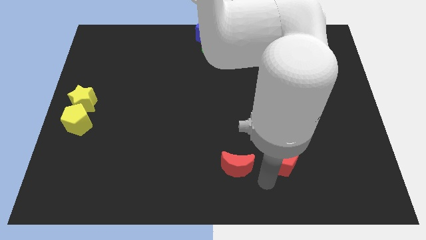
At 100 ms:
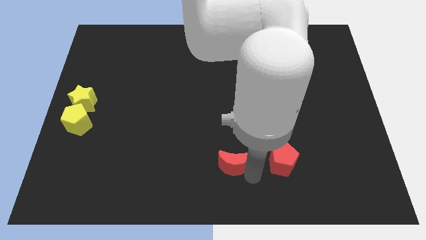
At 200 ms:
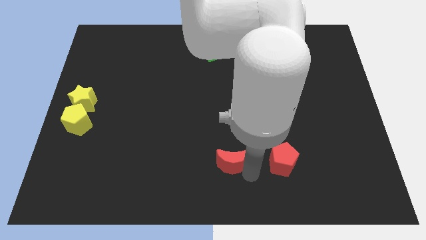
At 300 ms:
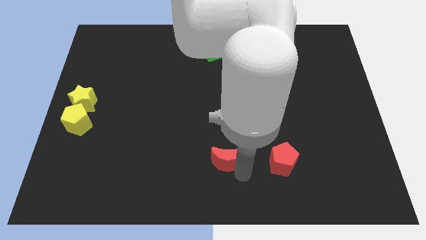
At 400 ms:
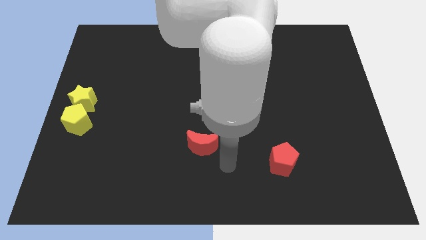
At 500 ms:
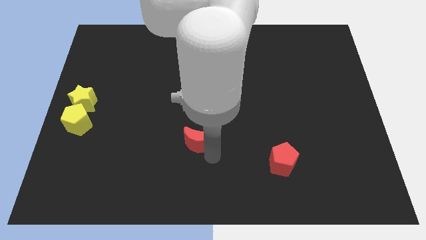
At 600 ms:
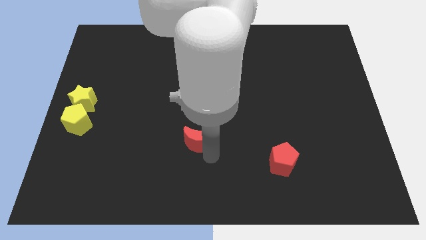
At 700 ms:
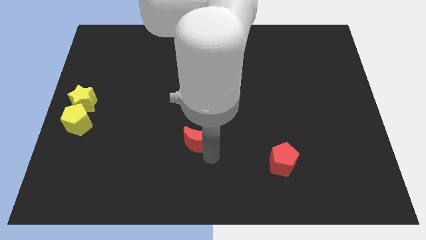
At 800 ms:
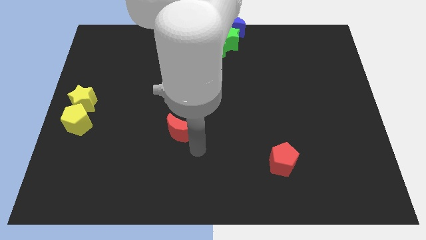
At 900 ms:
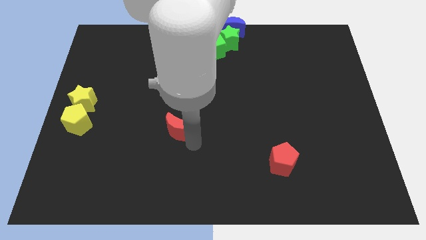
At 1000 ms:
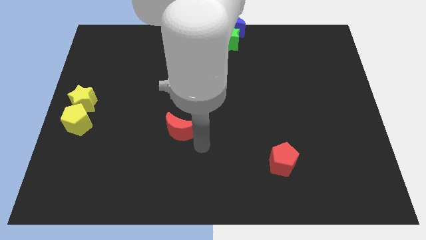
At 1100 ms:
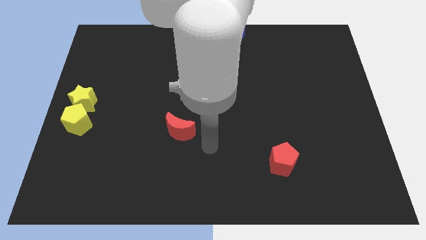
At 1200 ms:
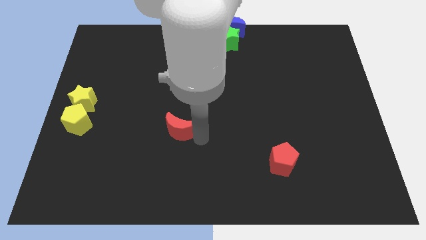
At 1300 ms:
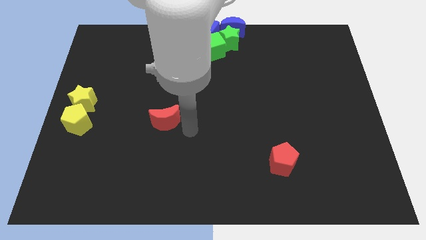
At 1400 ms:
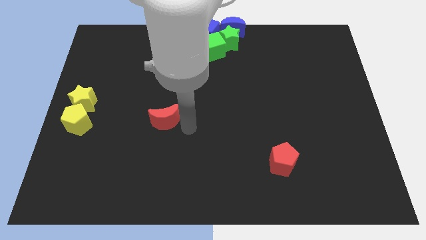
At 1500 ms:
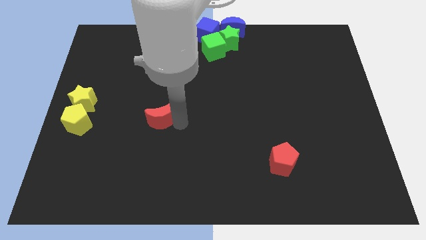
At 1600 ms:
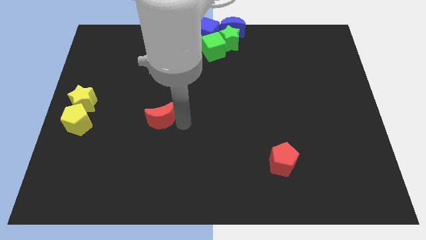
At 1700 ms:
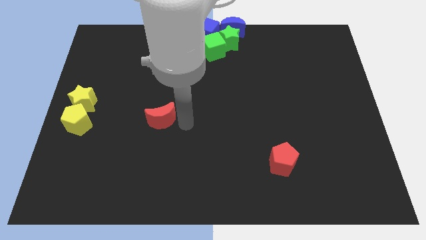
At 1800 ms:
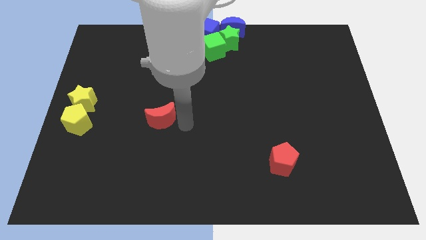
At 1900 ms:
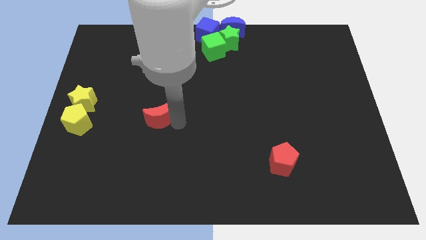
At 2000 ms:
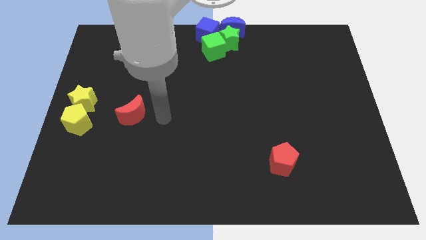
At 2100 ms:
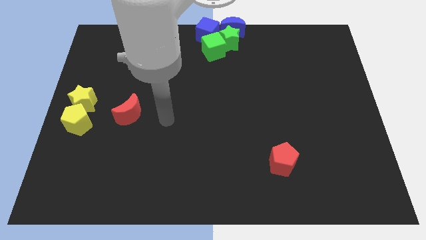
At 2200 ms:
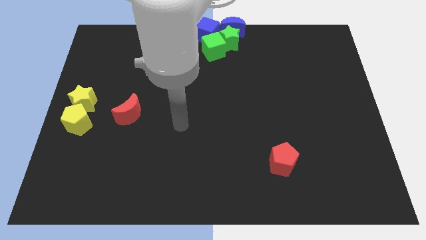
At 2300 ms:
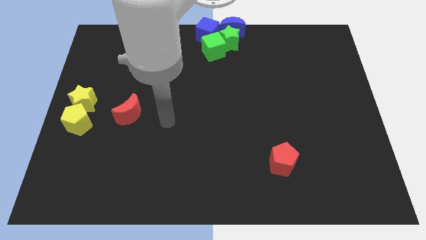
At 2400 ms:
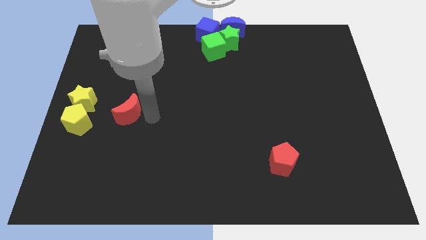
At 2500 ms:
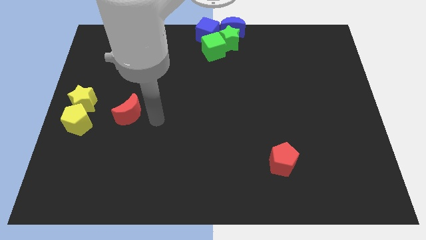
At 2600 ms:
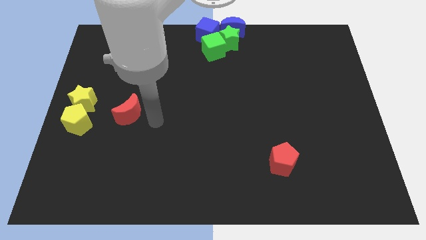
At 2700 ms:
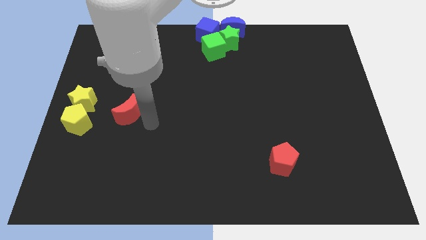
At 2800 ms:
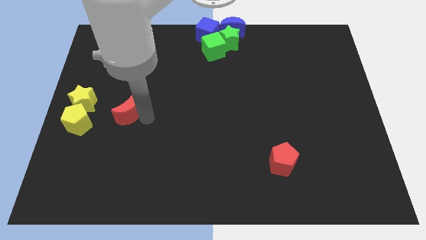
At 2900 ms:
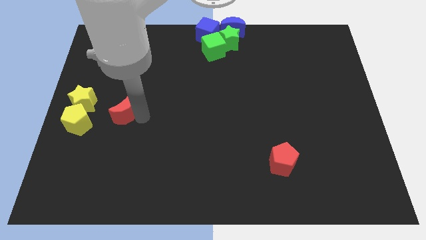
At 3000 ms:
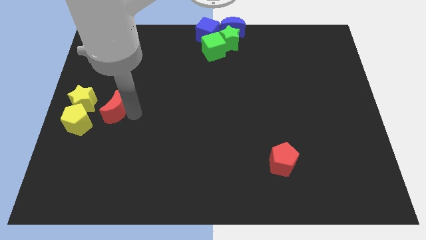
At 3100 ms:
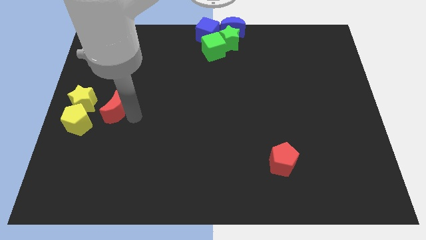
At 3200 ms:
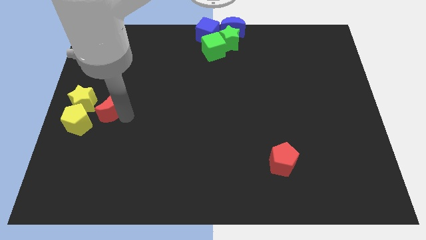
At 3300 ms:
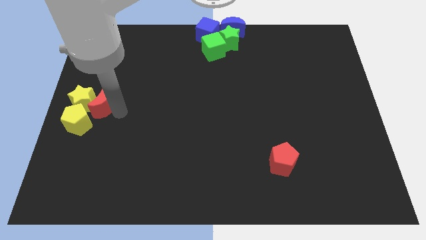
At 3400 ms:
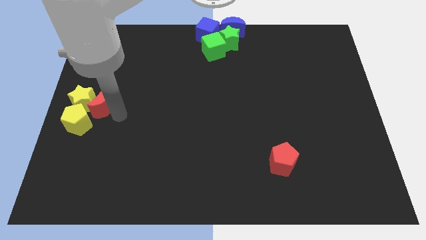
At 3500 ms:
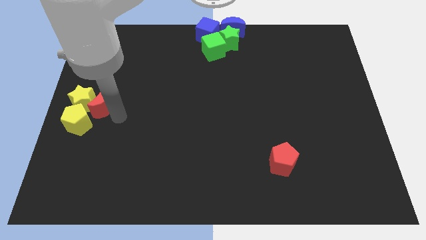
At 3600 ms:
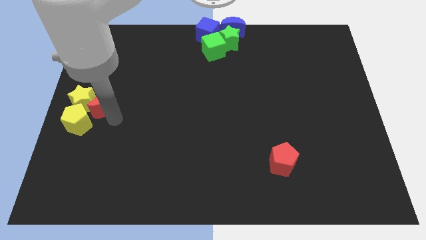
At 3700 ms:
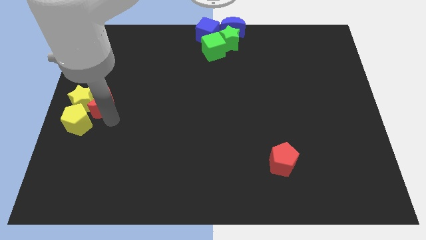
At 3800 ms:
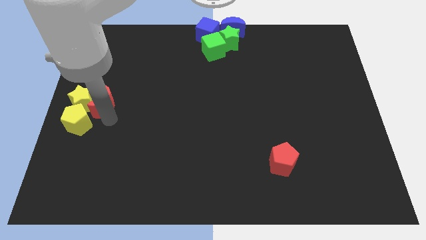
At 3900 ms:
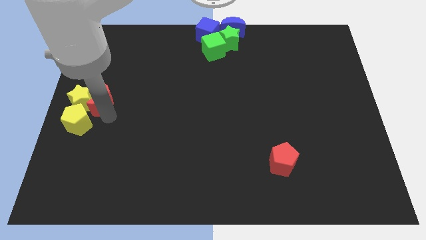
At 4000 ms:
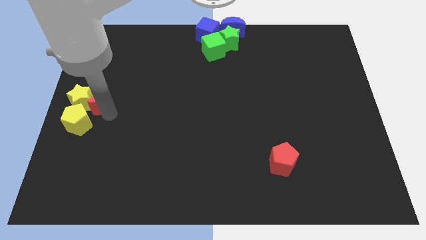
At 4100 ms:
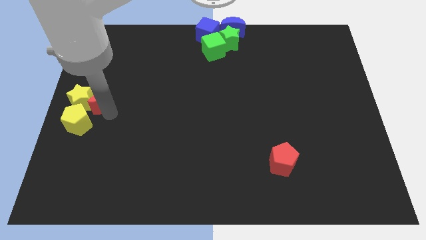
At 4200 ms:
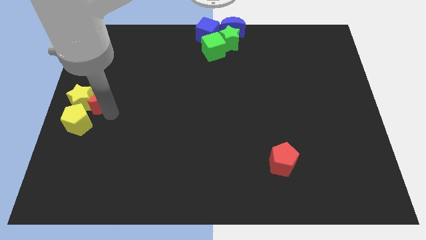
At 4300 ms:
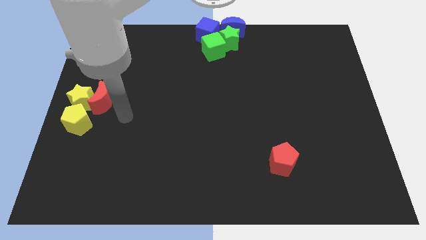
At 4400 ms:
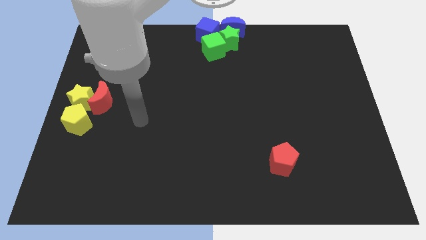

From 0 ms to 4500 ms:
push red moon into the yellow star

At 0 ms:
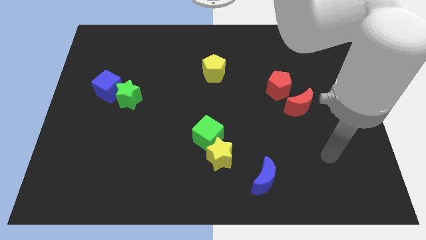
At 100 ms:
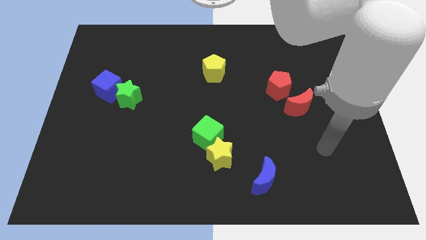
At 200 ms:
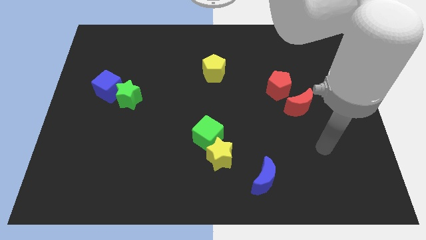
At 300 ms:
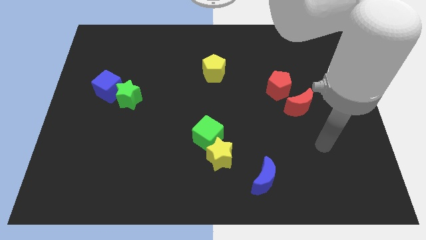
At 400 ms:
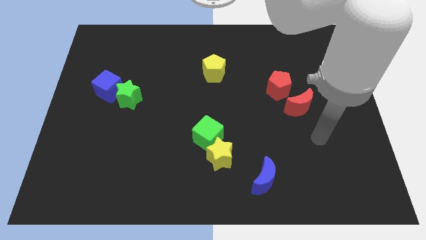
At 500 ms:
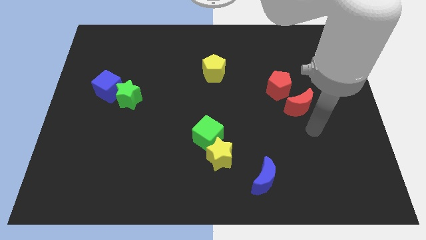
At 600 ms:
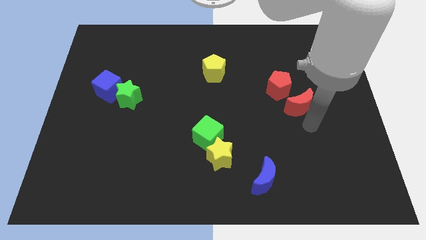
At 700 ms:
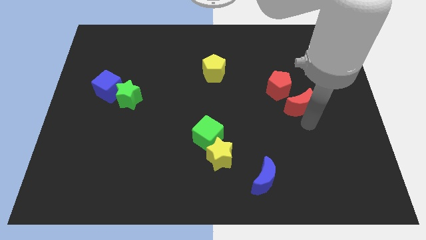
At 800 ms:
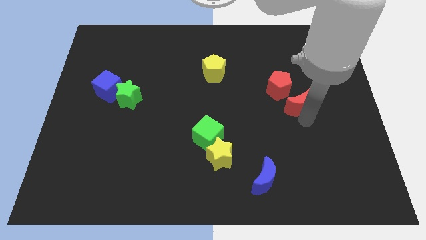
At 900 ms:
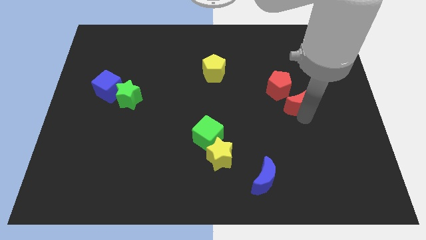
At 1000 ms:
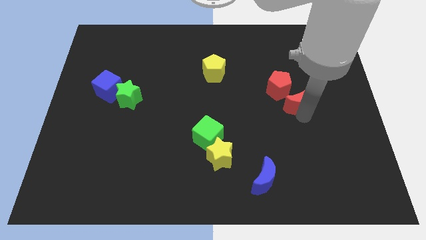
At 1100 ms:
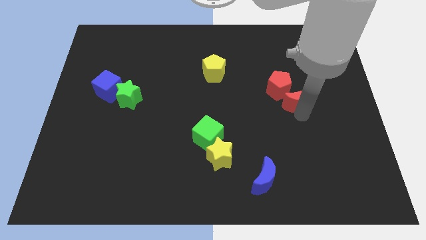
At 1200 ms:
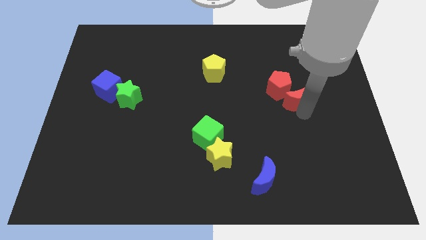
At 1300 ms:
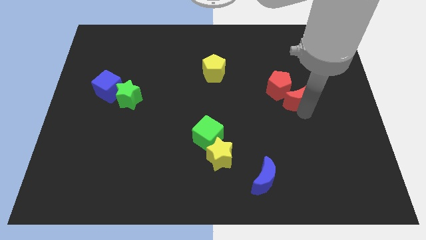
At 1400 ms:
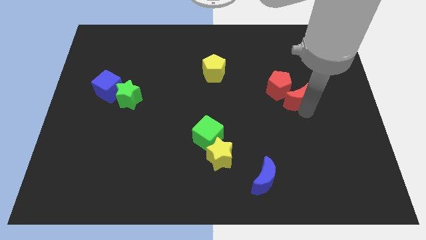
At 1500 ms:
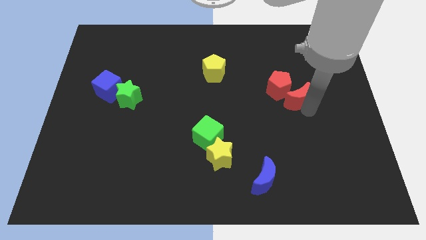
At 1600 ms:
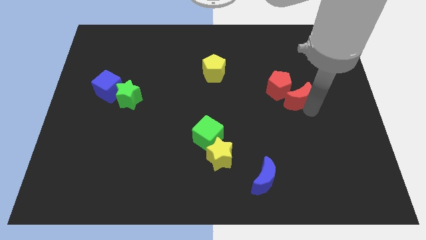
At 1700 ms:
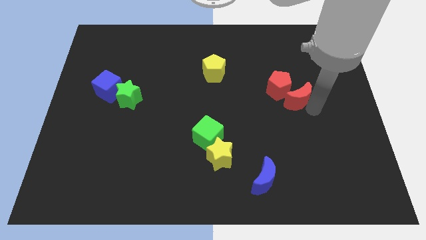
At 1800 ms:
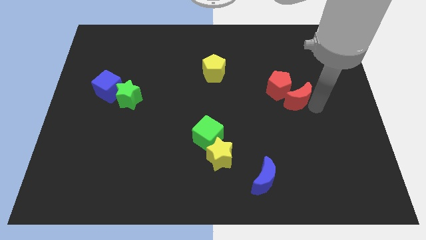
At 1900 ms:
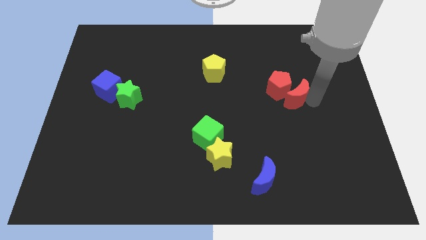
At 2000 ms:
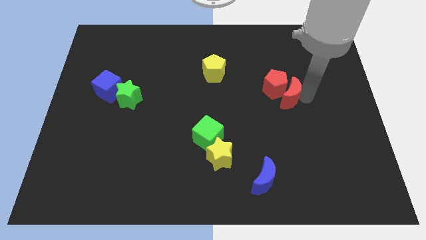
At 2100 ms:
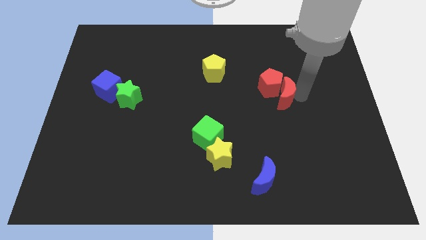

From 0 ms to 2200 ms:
move the red crescent close to the red pentagon

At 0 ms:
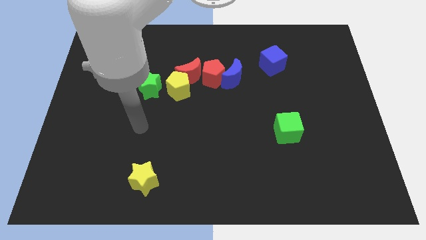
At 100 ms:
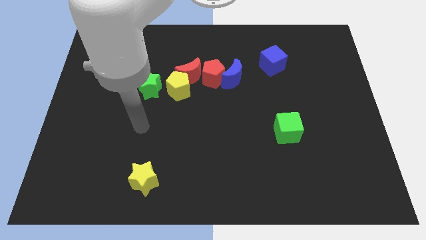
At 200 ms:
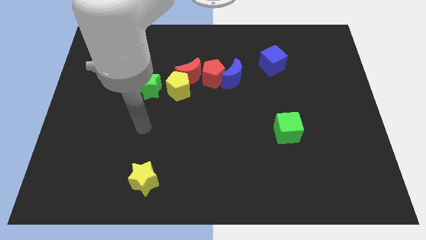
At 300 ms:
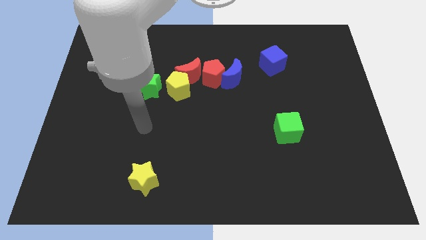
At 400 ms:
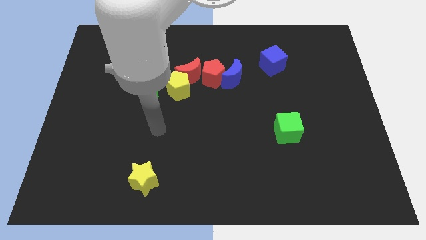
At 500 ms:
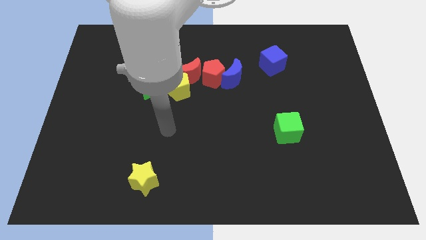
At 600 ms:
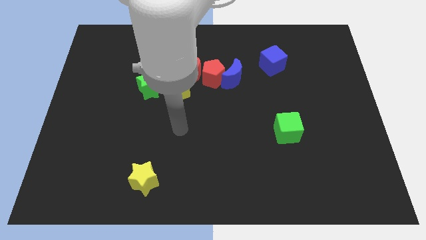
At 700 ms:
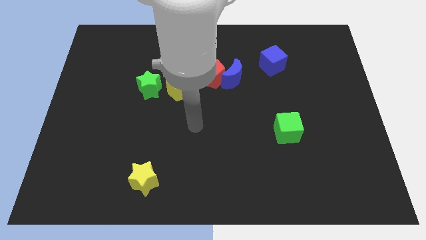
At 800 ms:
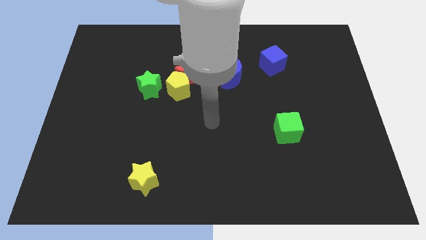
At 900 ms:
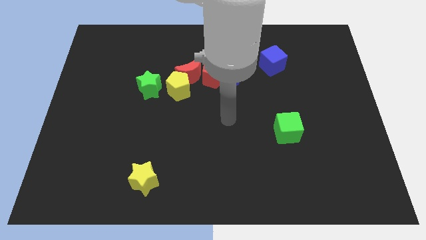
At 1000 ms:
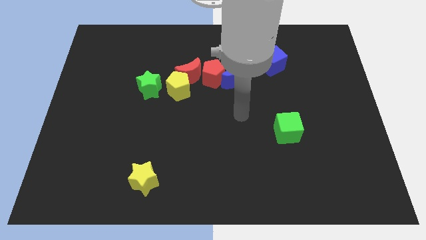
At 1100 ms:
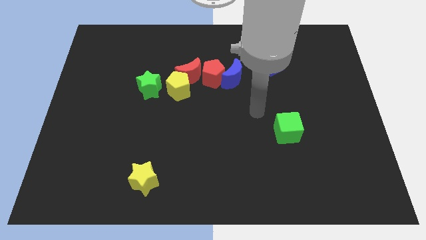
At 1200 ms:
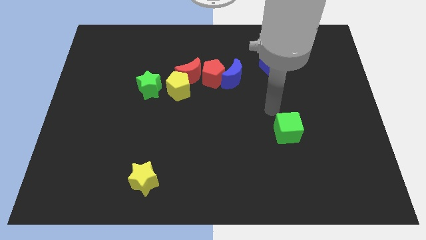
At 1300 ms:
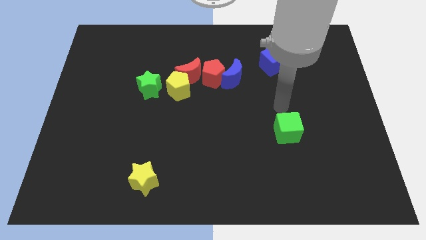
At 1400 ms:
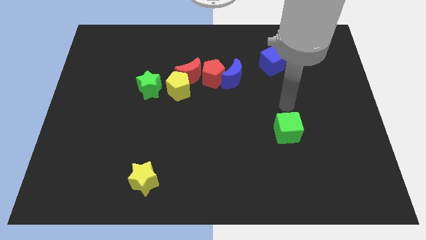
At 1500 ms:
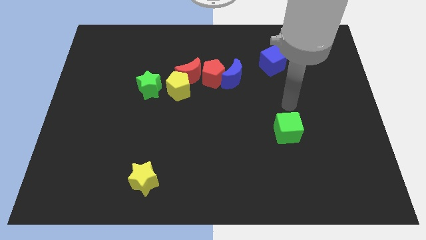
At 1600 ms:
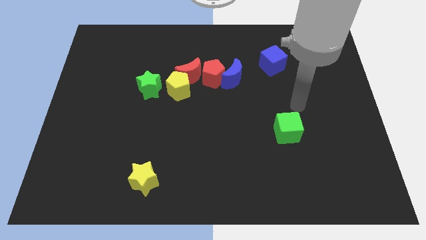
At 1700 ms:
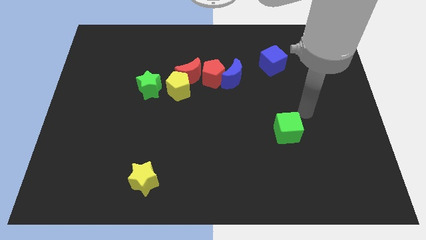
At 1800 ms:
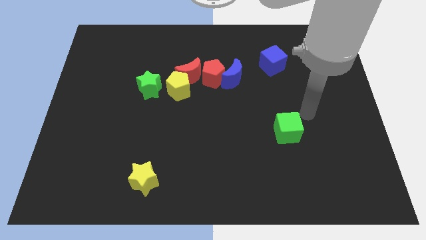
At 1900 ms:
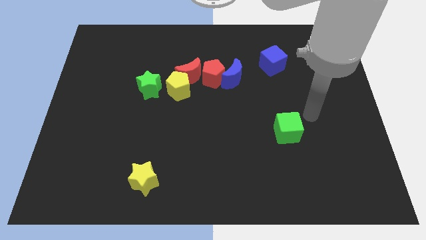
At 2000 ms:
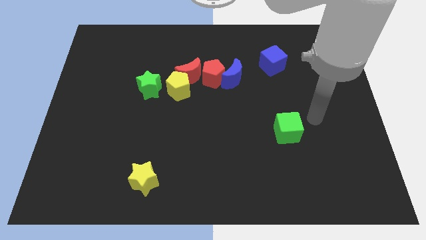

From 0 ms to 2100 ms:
move your arm close to the green cube

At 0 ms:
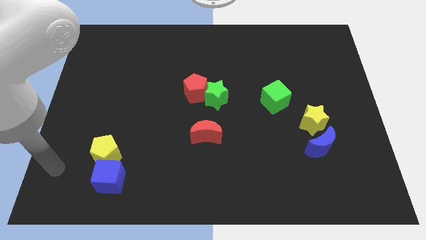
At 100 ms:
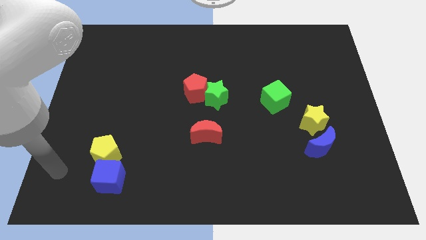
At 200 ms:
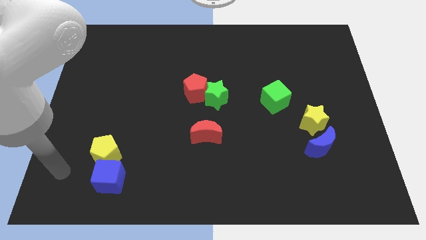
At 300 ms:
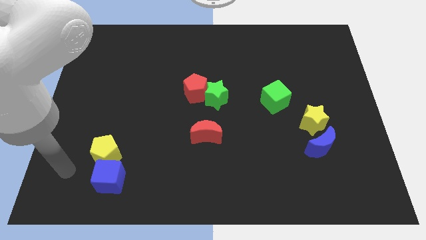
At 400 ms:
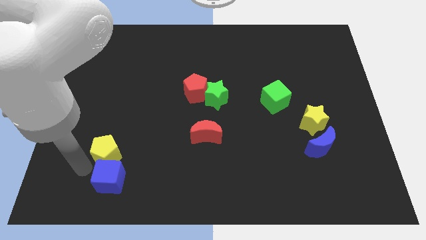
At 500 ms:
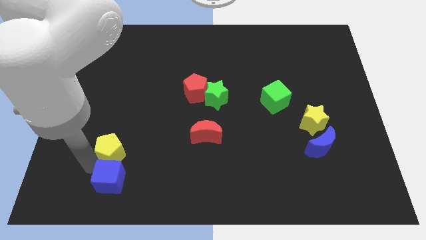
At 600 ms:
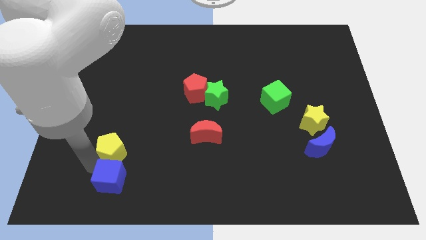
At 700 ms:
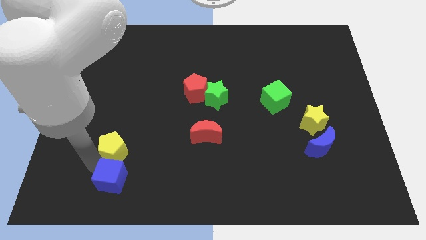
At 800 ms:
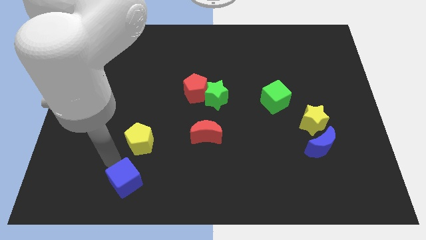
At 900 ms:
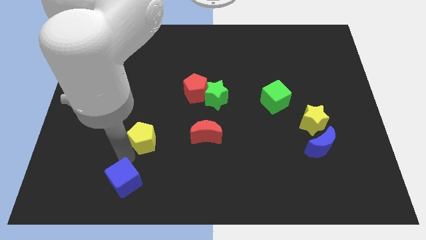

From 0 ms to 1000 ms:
separate yellow pentagon from blue cube
